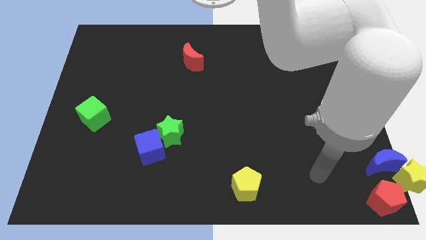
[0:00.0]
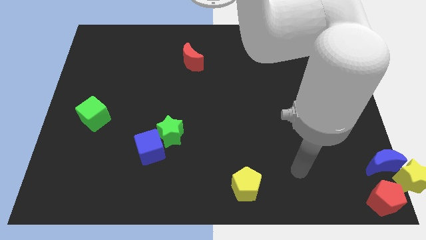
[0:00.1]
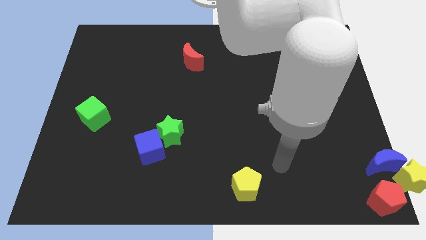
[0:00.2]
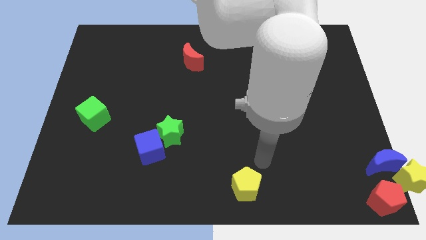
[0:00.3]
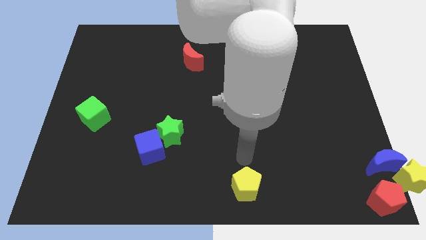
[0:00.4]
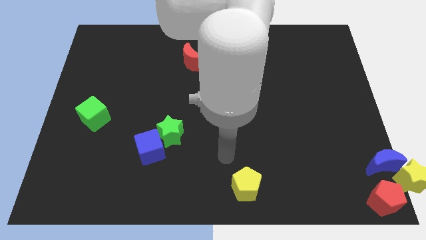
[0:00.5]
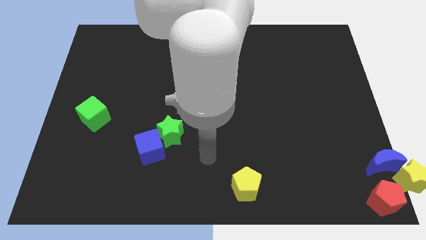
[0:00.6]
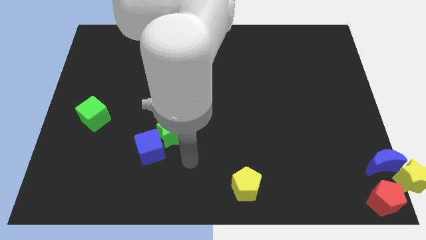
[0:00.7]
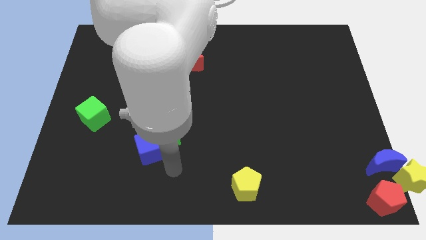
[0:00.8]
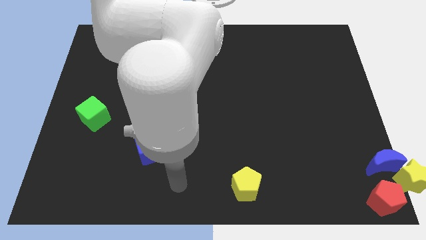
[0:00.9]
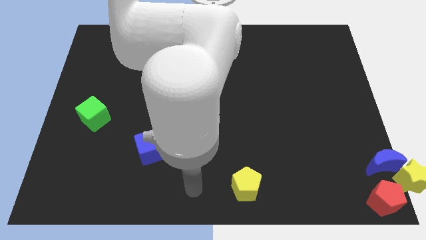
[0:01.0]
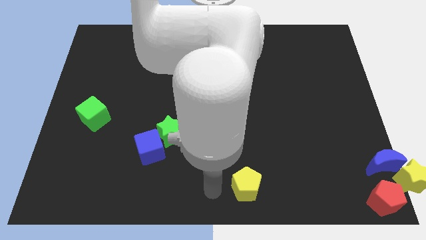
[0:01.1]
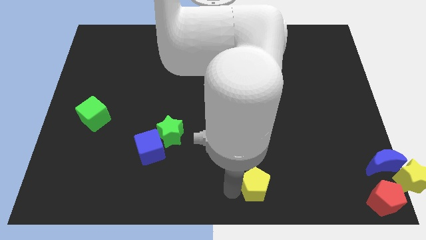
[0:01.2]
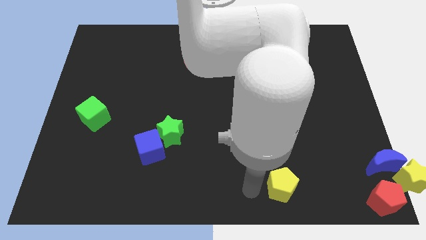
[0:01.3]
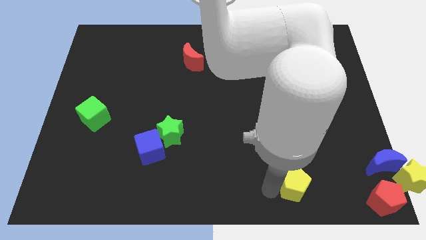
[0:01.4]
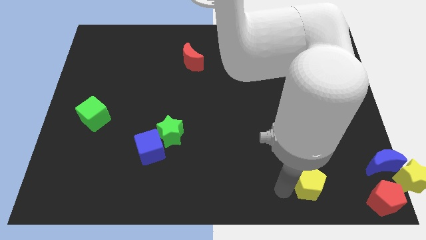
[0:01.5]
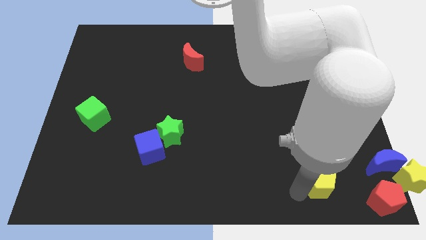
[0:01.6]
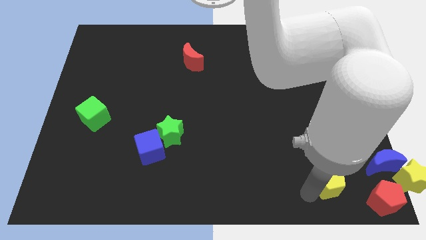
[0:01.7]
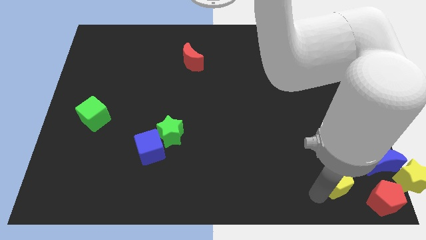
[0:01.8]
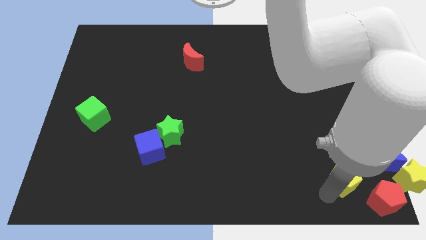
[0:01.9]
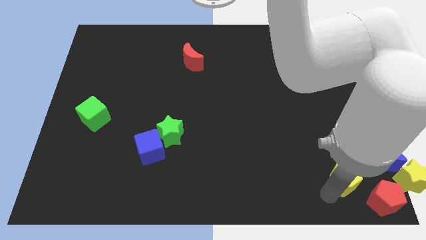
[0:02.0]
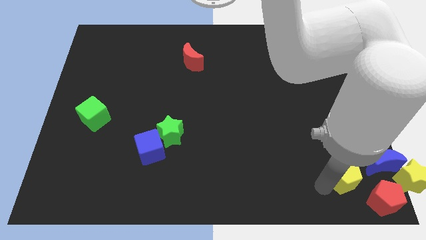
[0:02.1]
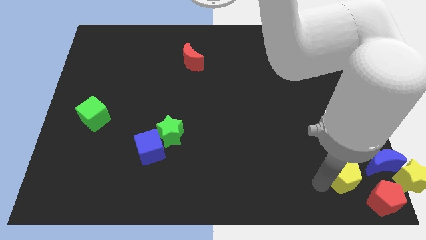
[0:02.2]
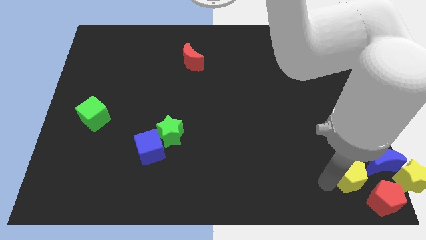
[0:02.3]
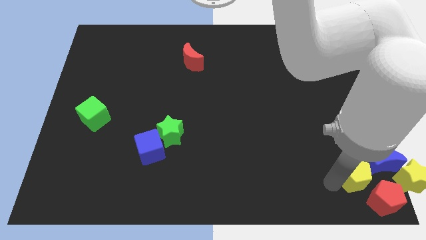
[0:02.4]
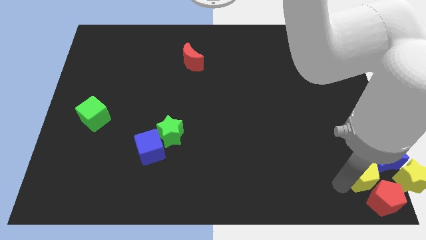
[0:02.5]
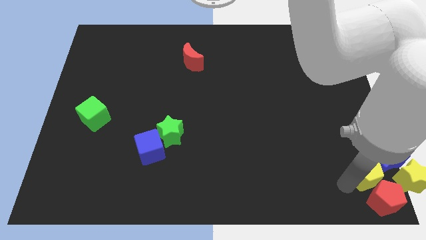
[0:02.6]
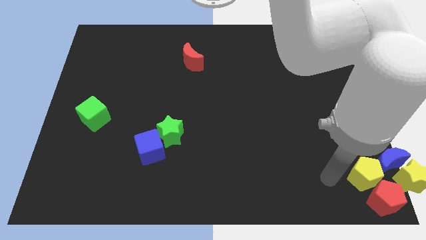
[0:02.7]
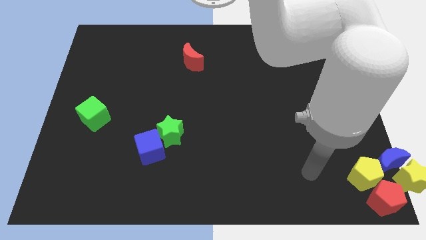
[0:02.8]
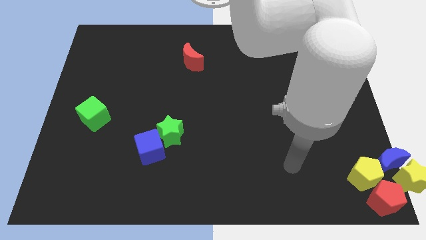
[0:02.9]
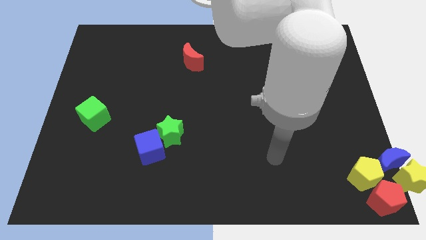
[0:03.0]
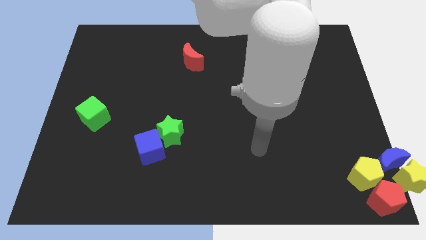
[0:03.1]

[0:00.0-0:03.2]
slide the yellow pentagon to the left of the blue moon

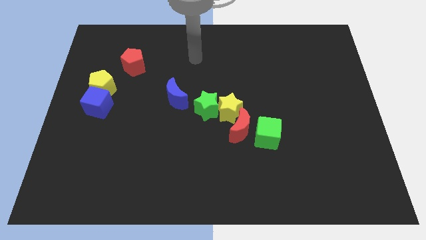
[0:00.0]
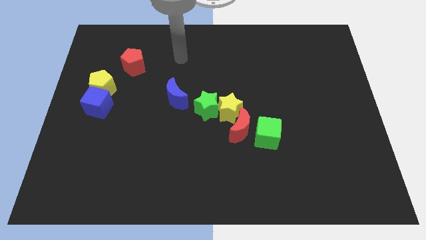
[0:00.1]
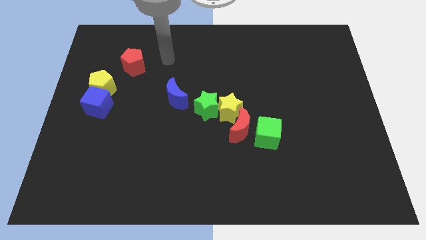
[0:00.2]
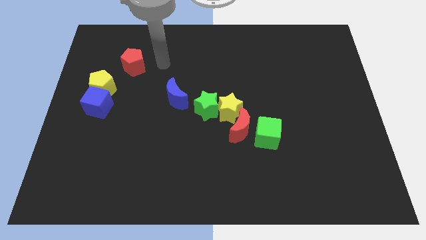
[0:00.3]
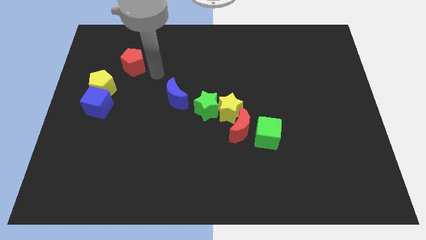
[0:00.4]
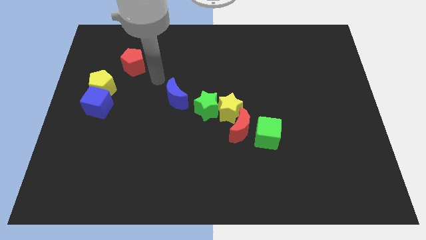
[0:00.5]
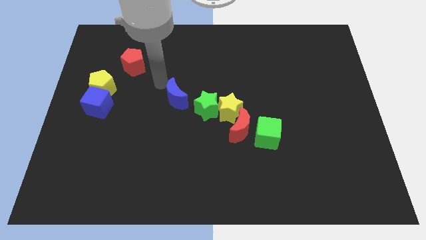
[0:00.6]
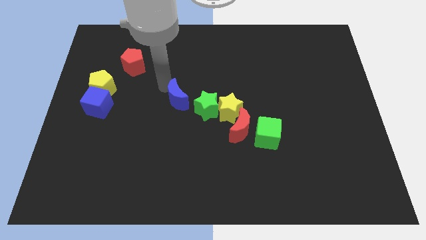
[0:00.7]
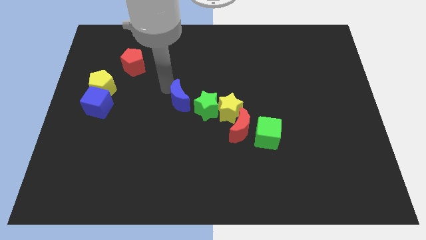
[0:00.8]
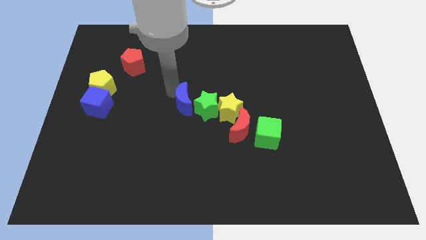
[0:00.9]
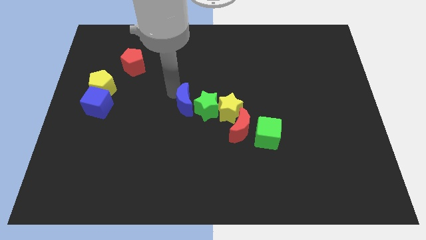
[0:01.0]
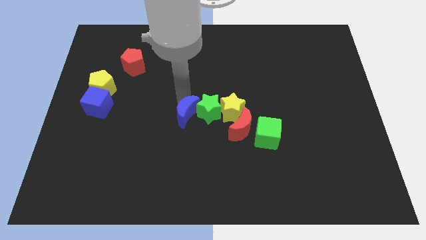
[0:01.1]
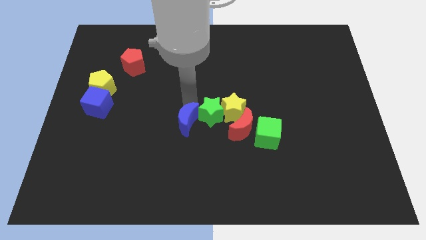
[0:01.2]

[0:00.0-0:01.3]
push the blue crescent into the green star

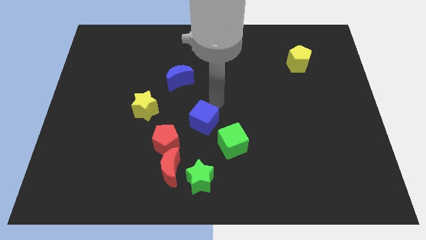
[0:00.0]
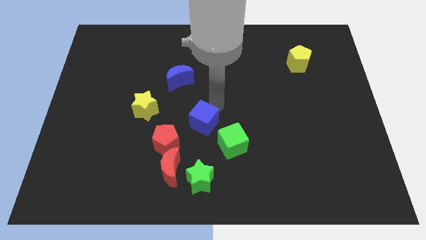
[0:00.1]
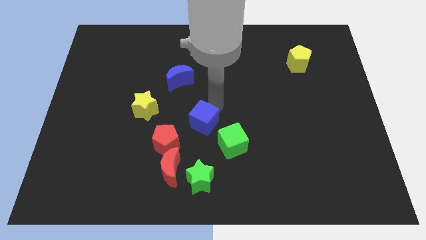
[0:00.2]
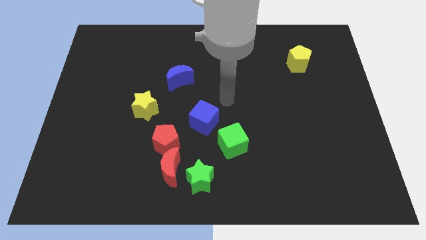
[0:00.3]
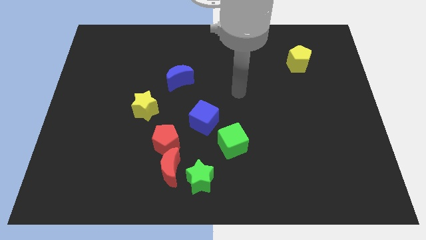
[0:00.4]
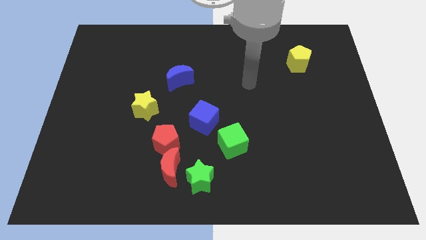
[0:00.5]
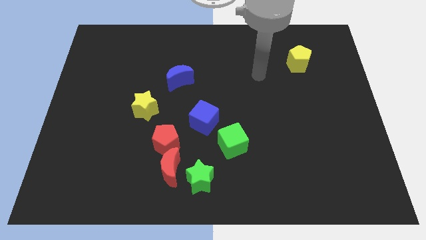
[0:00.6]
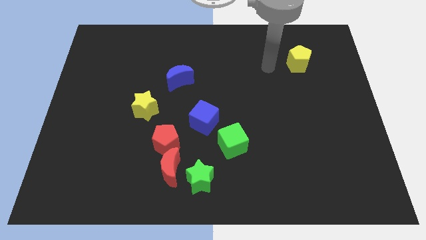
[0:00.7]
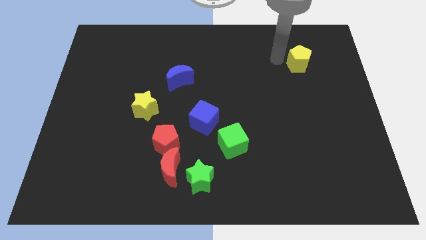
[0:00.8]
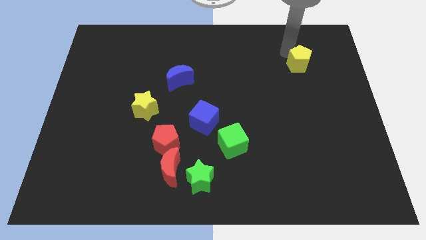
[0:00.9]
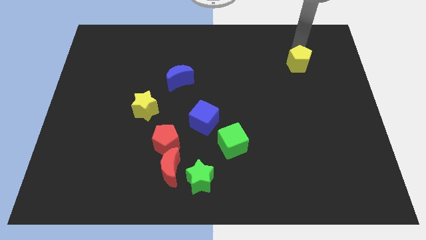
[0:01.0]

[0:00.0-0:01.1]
slide your arm away from blue cube

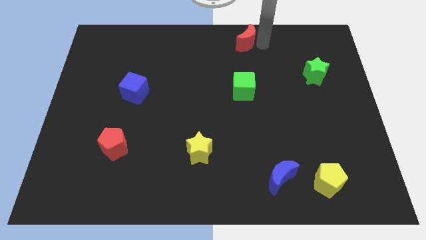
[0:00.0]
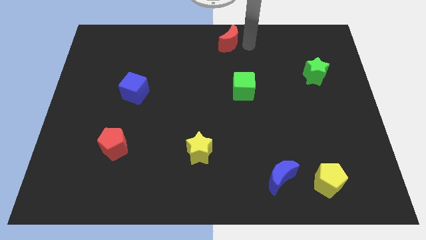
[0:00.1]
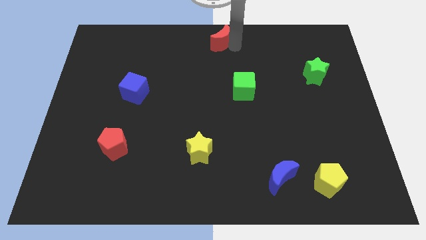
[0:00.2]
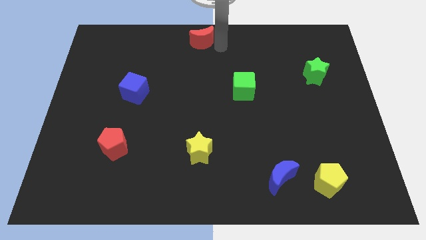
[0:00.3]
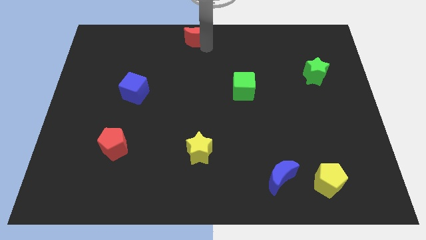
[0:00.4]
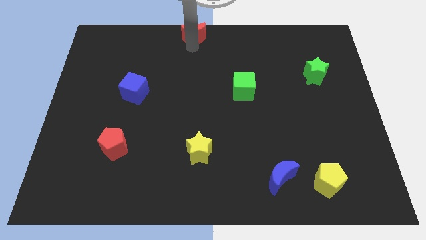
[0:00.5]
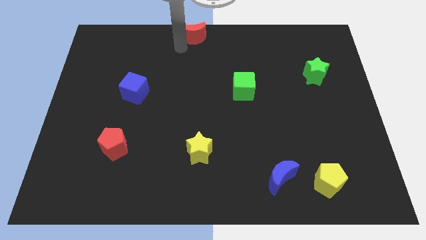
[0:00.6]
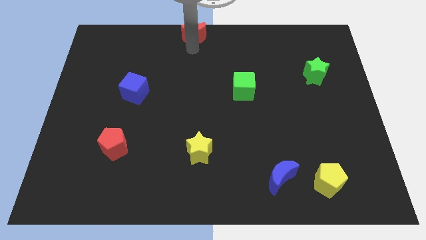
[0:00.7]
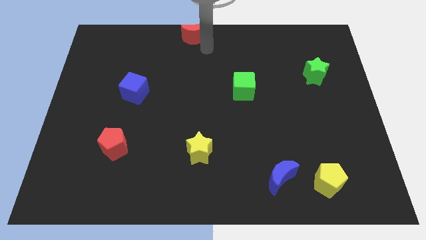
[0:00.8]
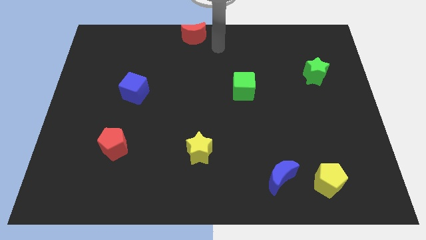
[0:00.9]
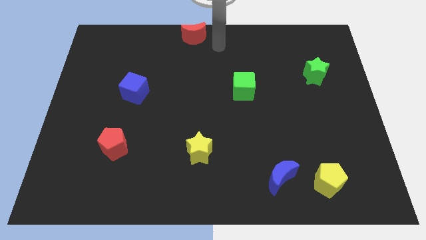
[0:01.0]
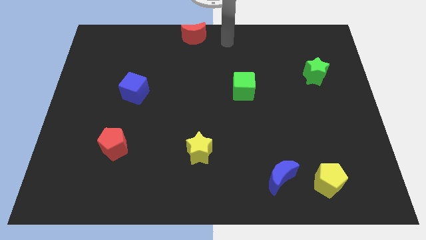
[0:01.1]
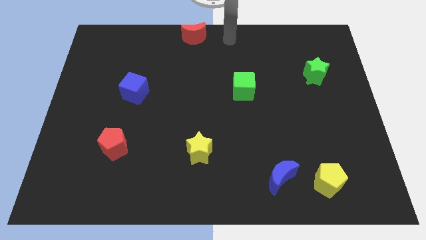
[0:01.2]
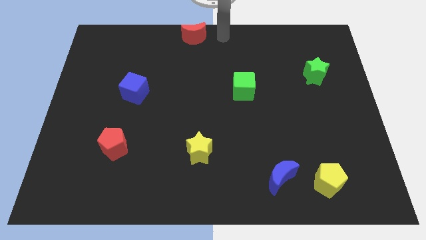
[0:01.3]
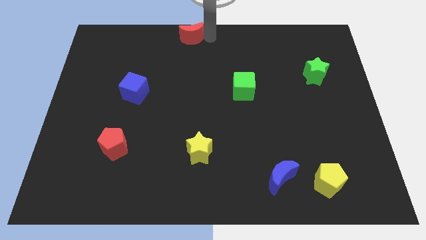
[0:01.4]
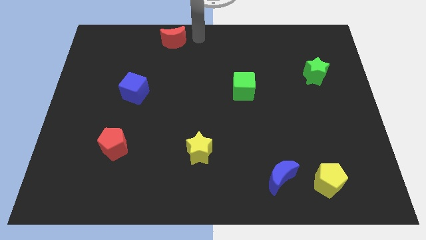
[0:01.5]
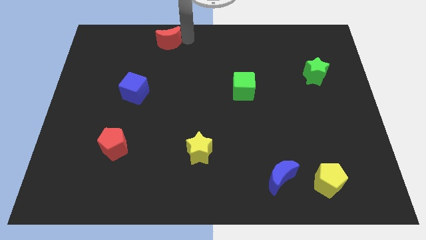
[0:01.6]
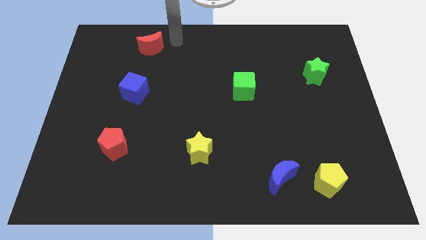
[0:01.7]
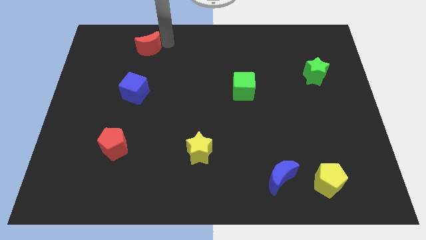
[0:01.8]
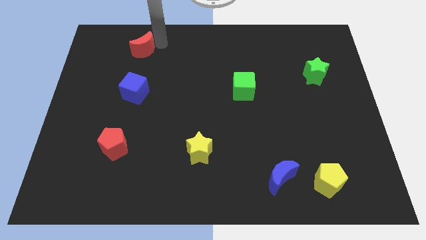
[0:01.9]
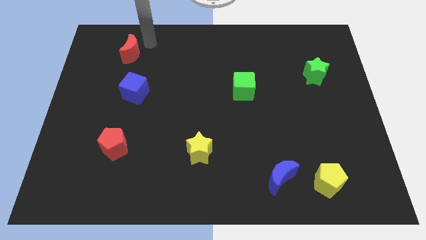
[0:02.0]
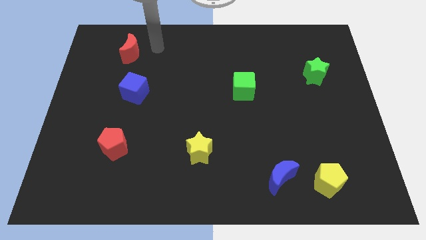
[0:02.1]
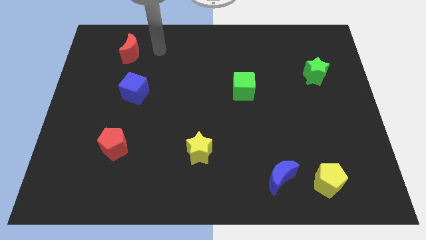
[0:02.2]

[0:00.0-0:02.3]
move the red moon to the top side of the blue cube

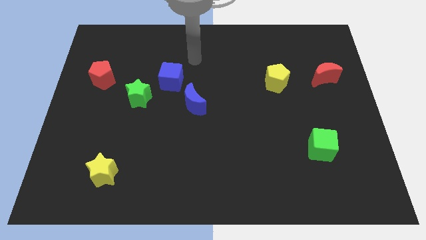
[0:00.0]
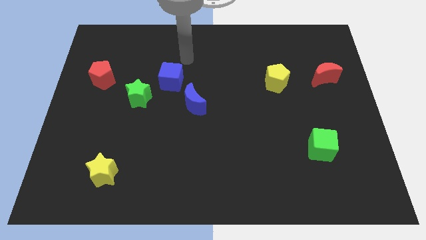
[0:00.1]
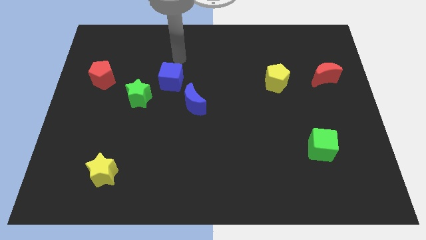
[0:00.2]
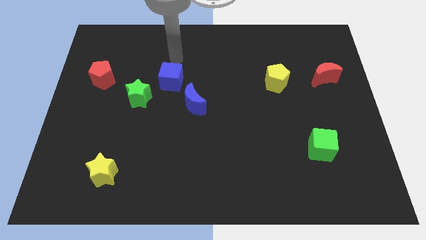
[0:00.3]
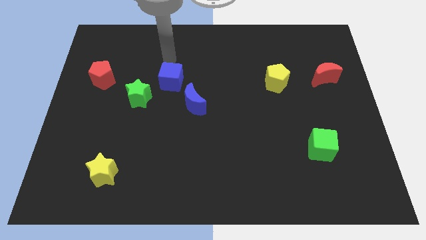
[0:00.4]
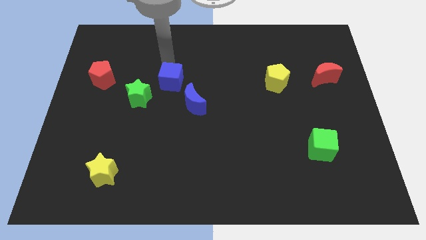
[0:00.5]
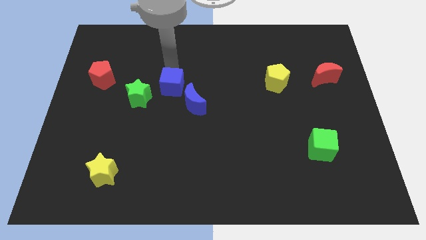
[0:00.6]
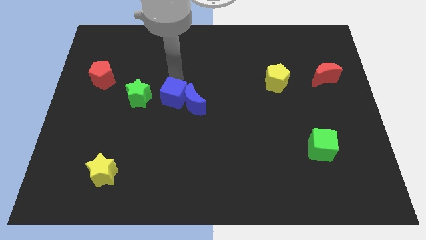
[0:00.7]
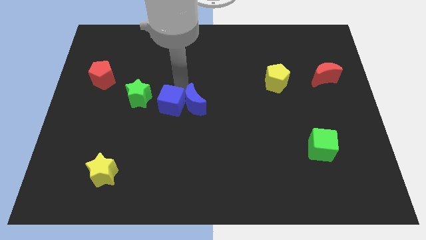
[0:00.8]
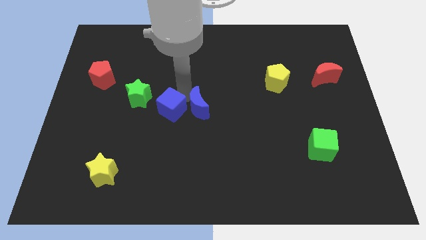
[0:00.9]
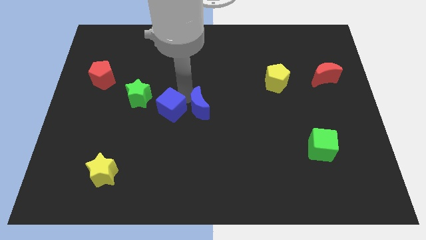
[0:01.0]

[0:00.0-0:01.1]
place your hand in between blue blocks
